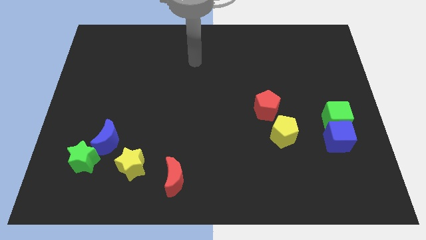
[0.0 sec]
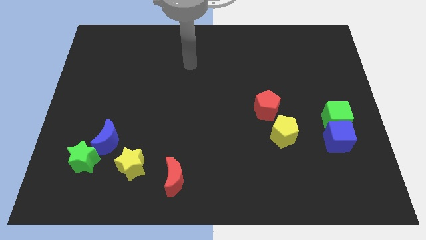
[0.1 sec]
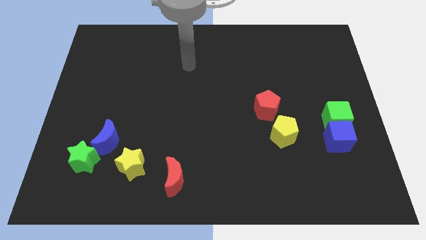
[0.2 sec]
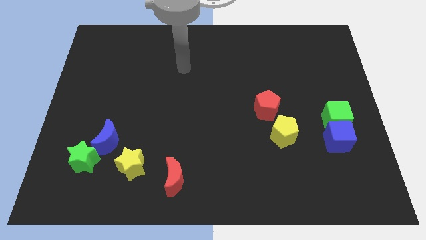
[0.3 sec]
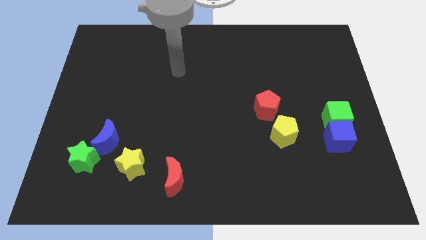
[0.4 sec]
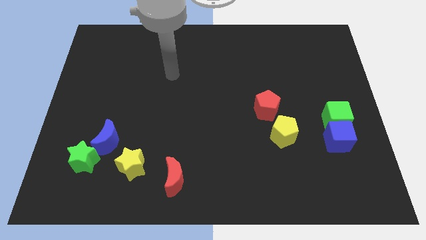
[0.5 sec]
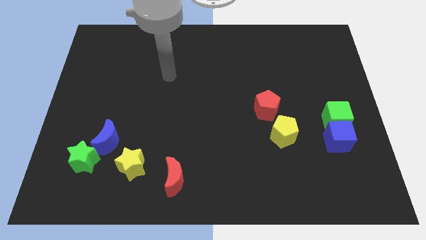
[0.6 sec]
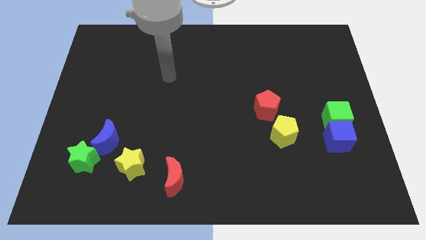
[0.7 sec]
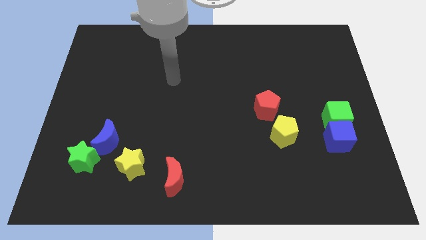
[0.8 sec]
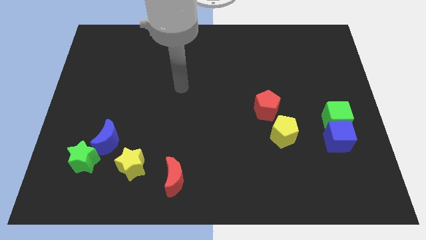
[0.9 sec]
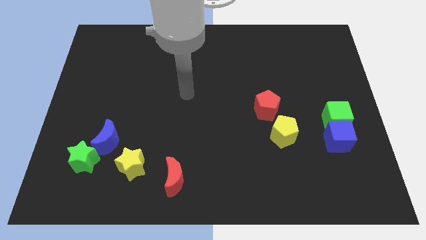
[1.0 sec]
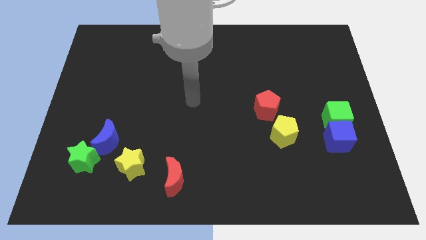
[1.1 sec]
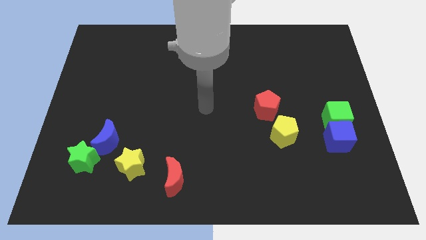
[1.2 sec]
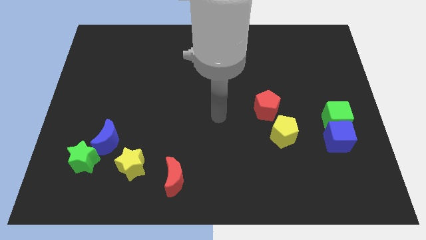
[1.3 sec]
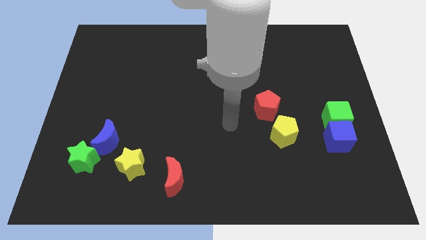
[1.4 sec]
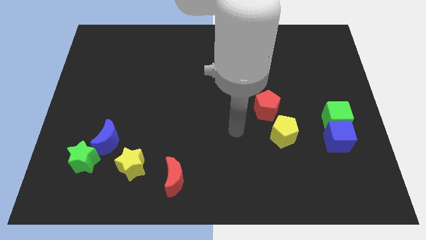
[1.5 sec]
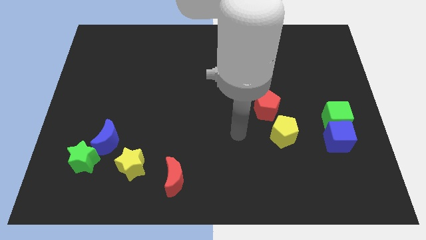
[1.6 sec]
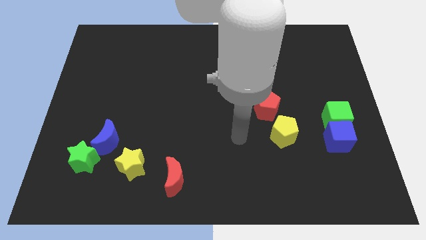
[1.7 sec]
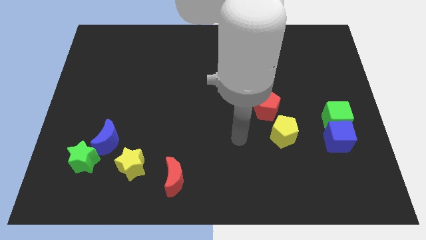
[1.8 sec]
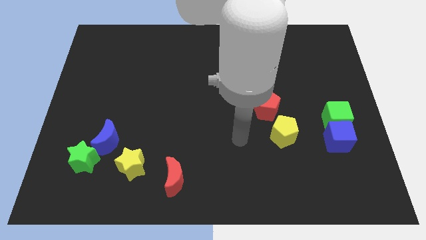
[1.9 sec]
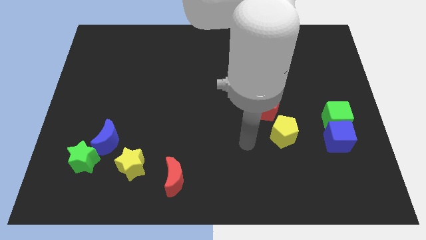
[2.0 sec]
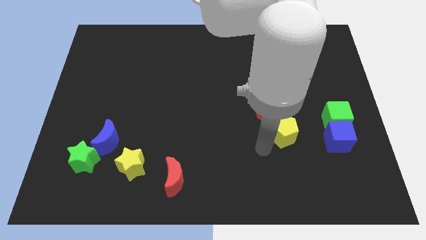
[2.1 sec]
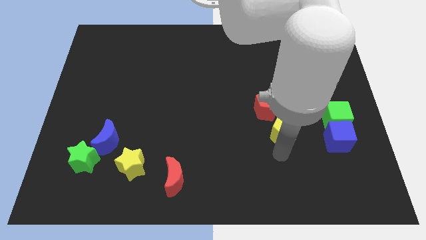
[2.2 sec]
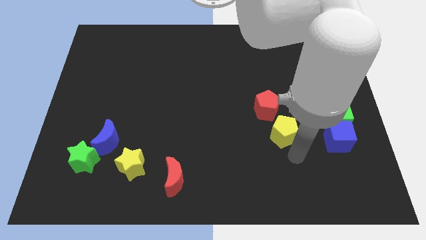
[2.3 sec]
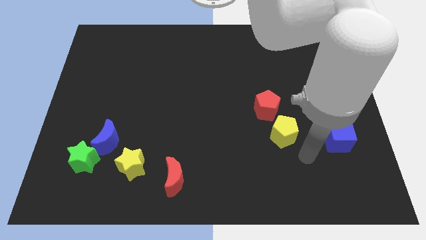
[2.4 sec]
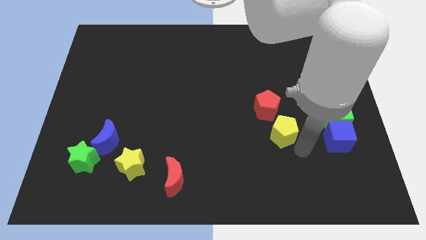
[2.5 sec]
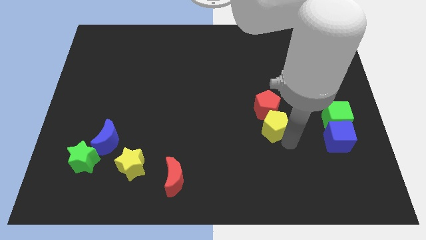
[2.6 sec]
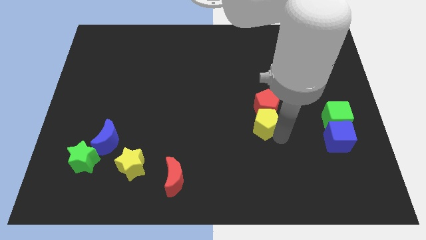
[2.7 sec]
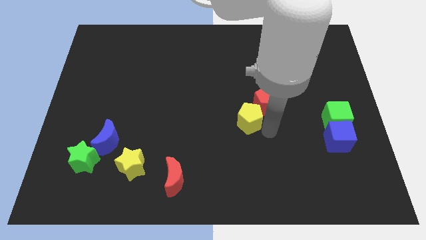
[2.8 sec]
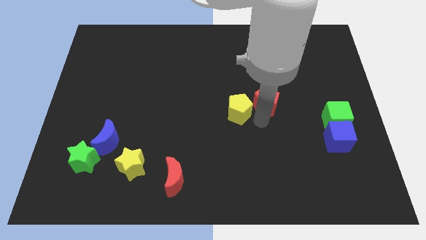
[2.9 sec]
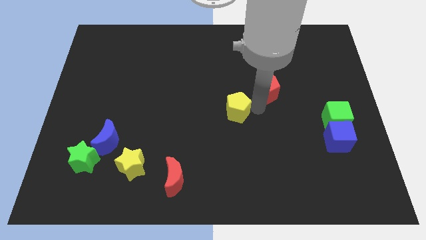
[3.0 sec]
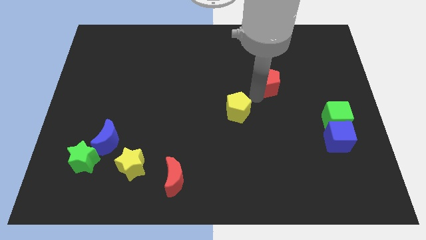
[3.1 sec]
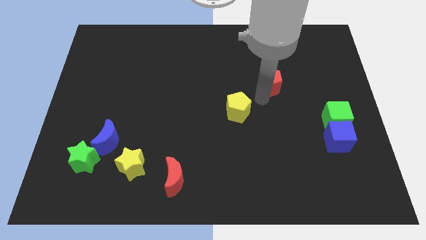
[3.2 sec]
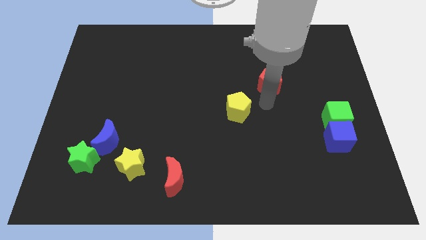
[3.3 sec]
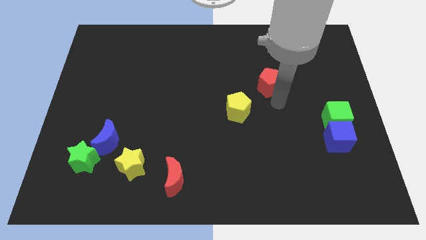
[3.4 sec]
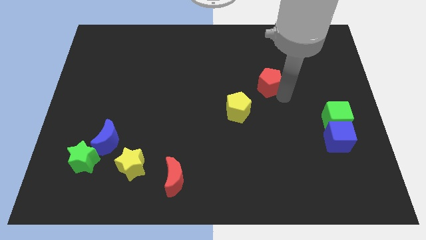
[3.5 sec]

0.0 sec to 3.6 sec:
push the yellow pentagon towards the center of the board

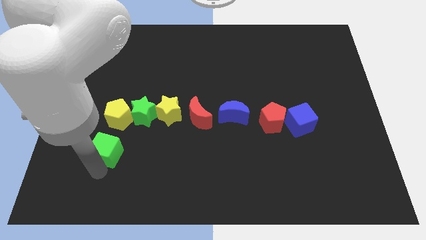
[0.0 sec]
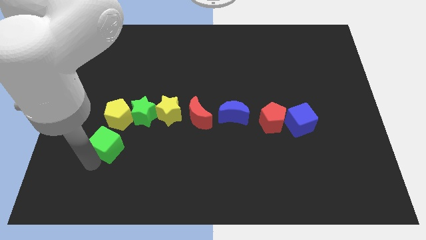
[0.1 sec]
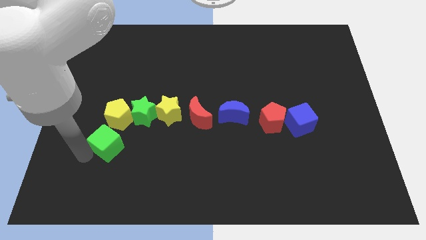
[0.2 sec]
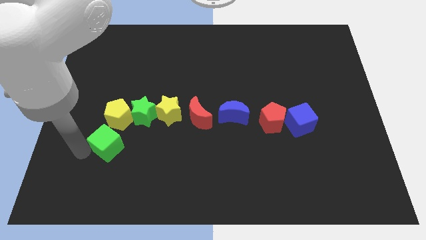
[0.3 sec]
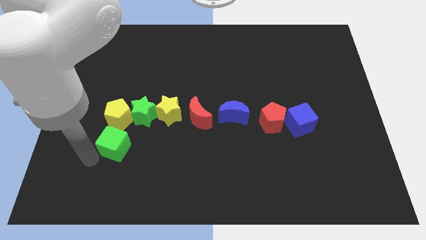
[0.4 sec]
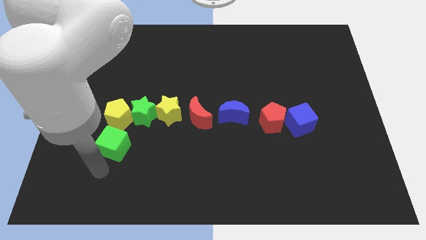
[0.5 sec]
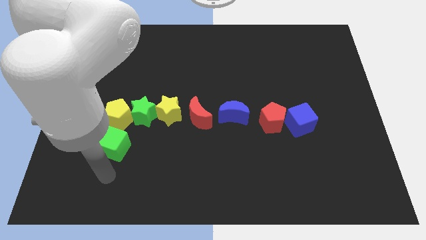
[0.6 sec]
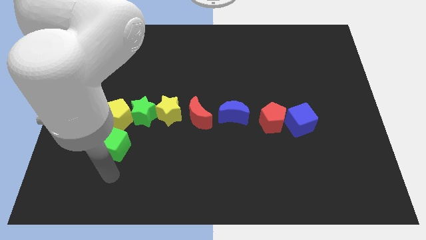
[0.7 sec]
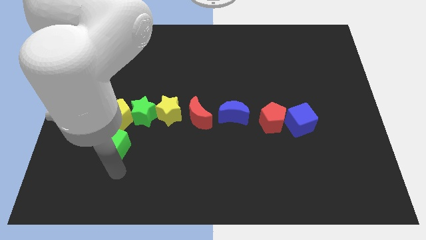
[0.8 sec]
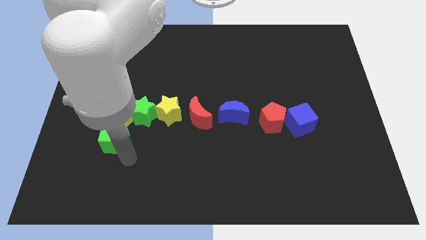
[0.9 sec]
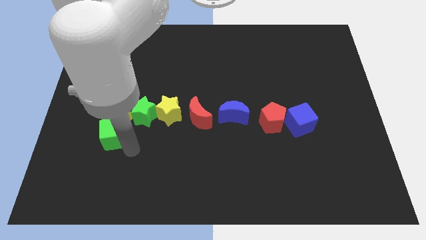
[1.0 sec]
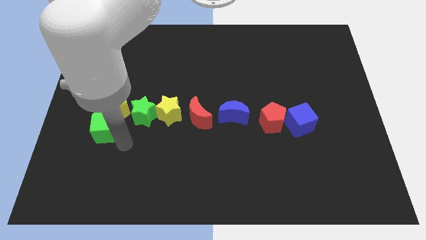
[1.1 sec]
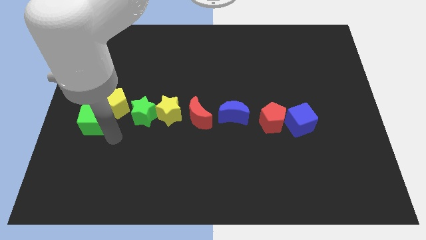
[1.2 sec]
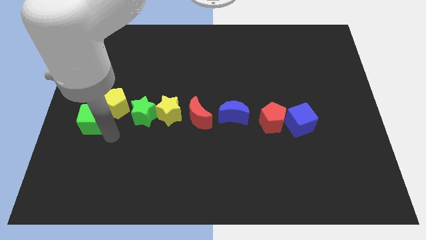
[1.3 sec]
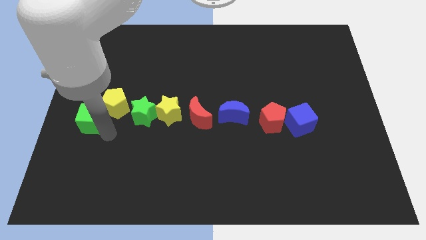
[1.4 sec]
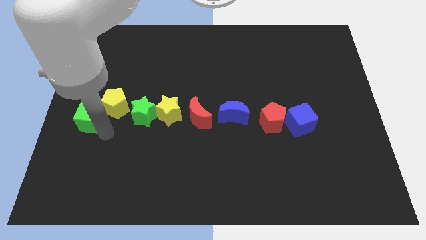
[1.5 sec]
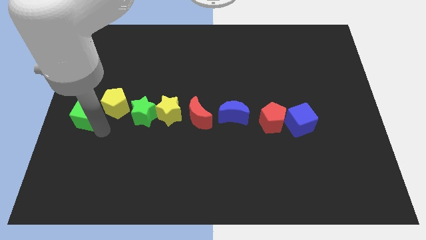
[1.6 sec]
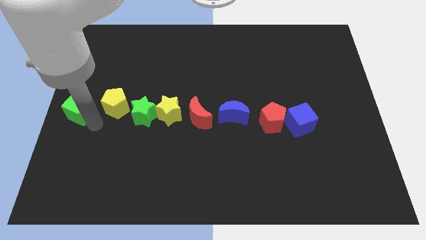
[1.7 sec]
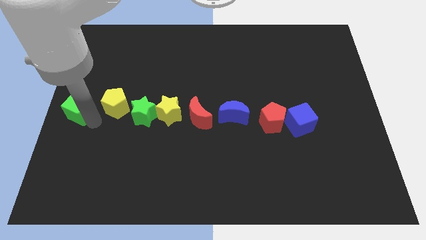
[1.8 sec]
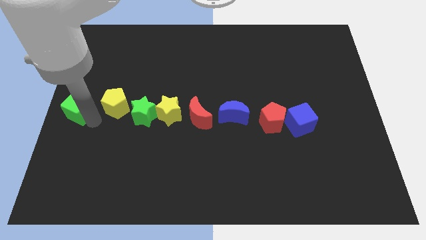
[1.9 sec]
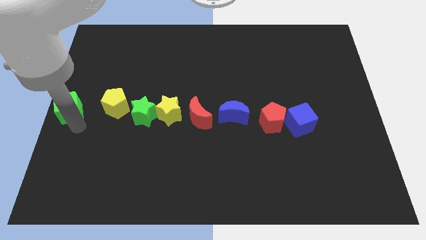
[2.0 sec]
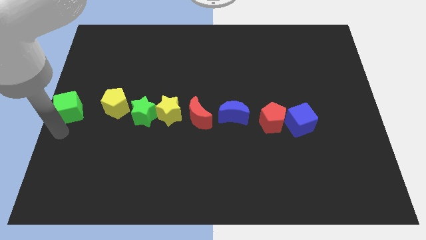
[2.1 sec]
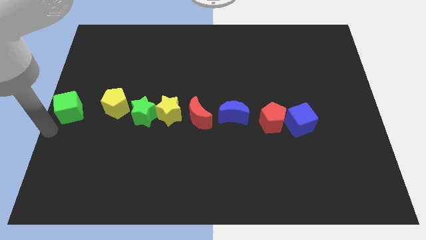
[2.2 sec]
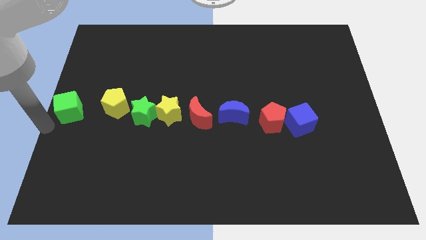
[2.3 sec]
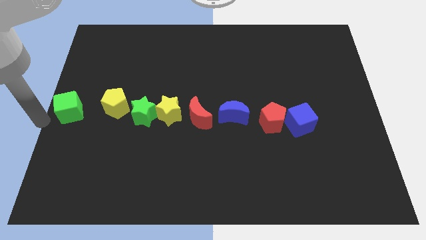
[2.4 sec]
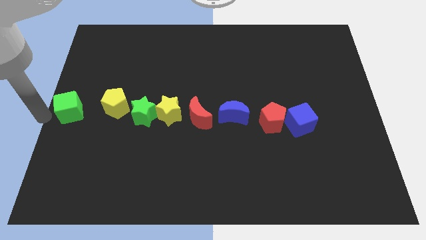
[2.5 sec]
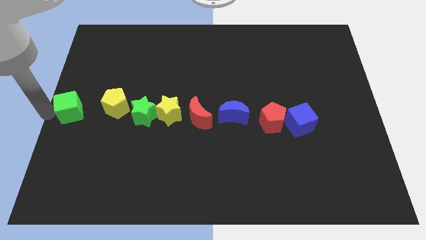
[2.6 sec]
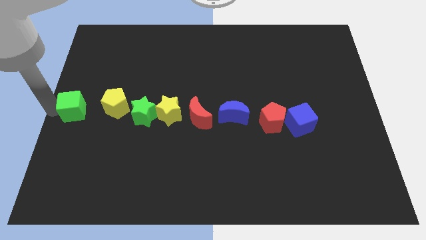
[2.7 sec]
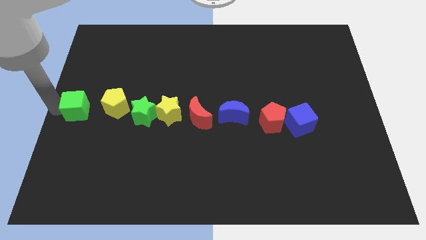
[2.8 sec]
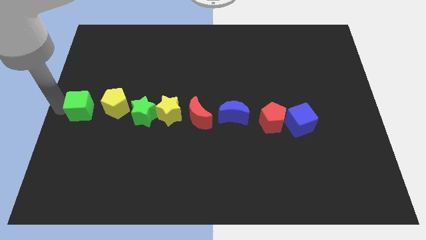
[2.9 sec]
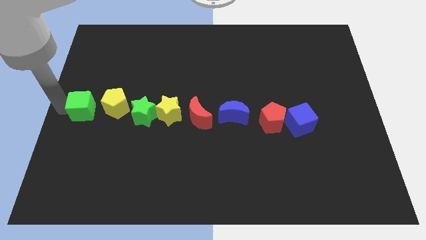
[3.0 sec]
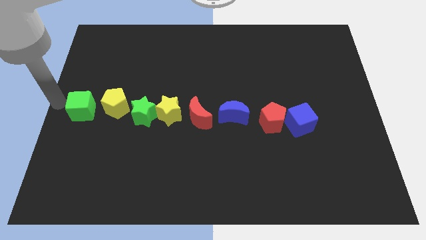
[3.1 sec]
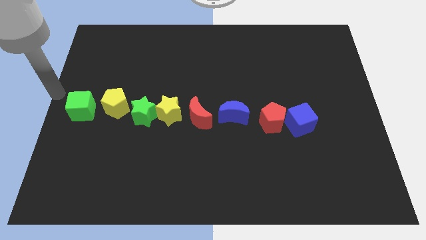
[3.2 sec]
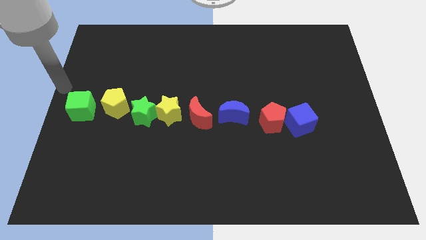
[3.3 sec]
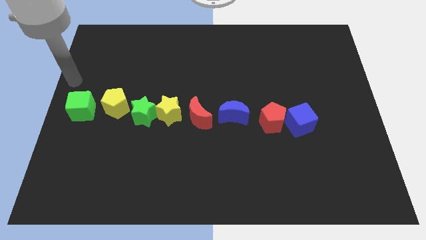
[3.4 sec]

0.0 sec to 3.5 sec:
put the green cube on the left side of the yellow pentagon

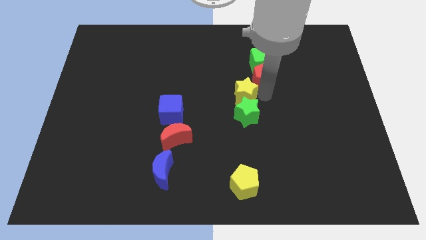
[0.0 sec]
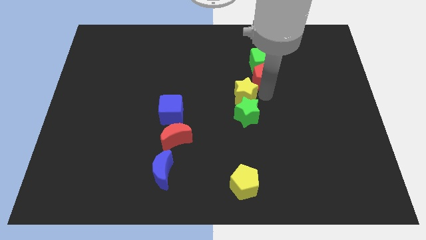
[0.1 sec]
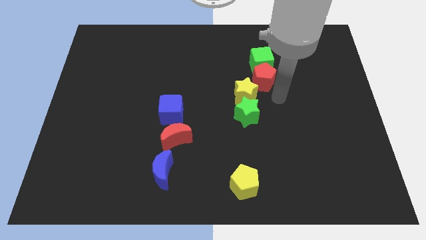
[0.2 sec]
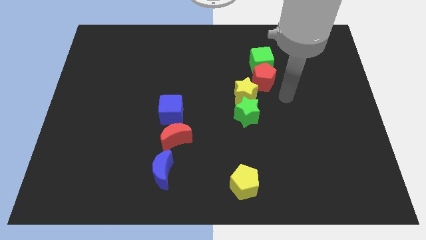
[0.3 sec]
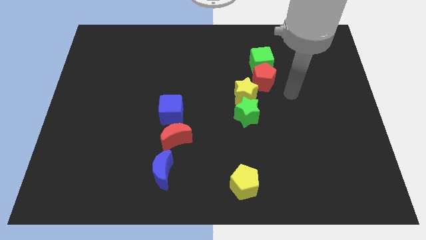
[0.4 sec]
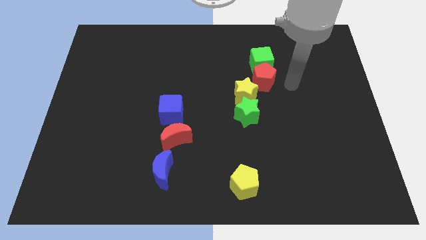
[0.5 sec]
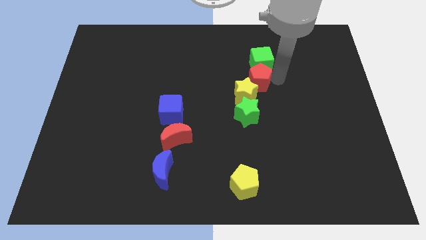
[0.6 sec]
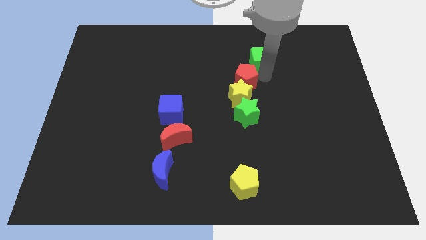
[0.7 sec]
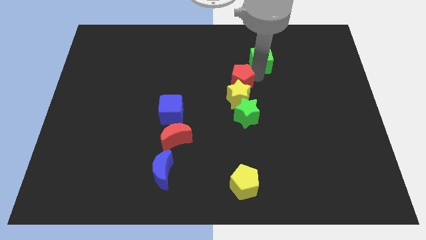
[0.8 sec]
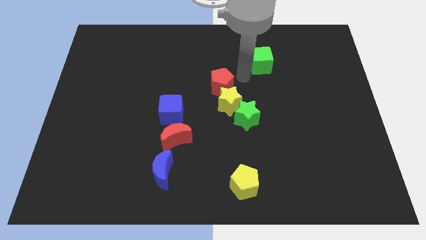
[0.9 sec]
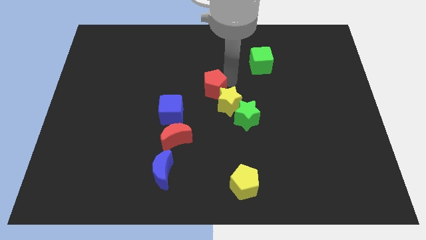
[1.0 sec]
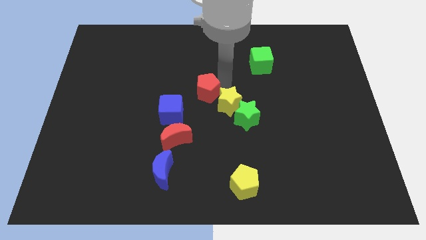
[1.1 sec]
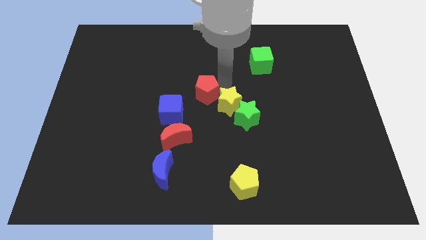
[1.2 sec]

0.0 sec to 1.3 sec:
move the red pentagon to the left side of the table

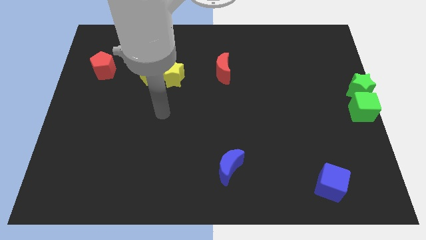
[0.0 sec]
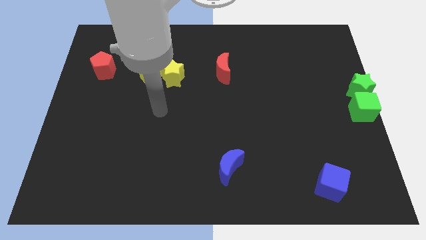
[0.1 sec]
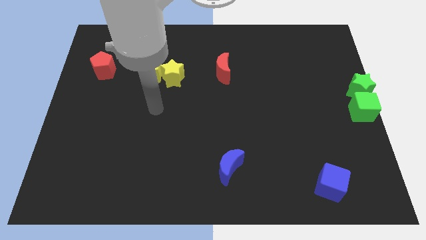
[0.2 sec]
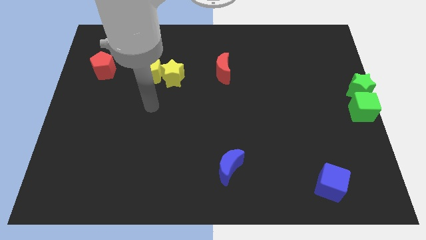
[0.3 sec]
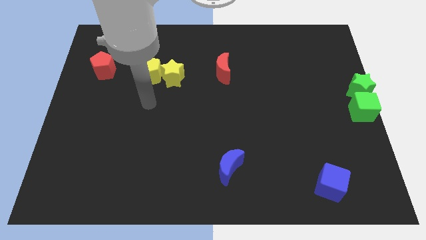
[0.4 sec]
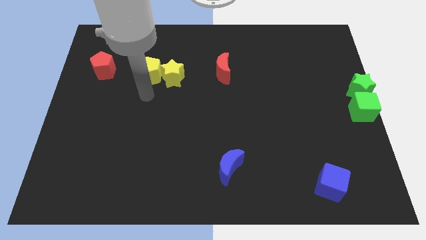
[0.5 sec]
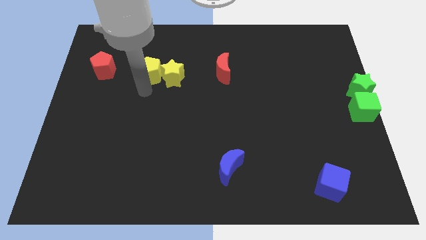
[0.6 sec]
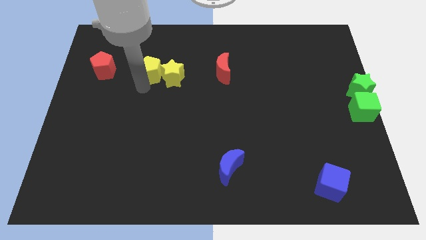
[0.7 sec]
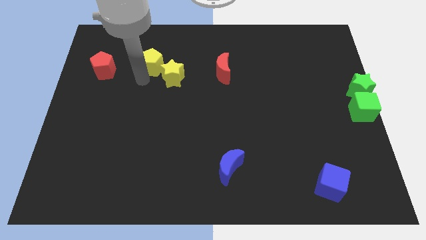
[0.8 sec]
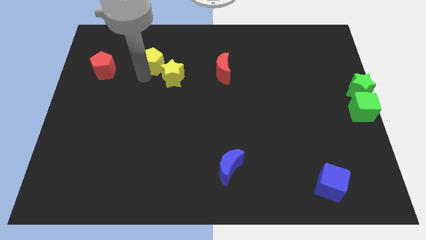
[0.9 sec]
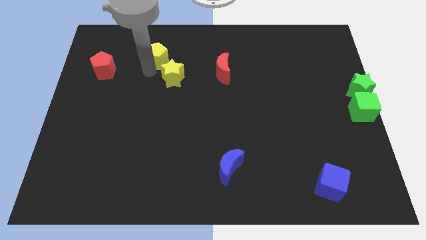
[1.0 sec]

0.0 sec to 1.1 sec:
move your arm close to the yellow pentagon
